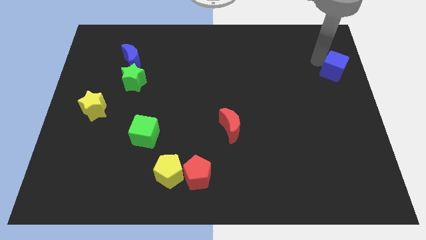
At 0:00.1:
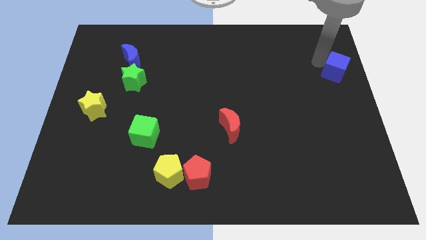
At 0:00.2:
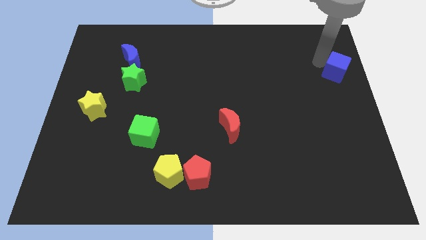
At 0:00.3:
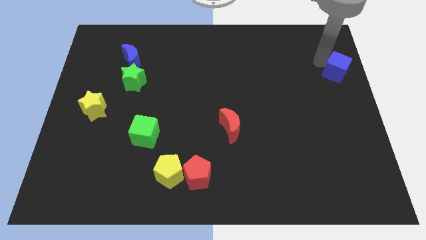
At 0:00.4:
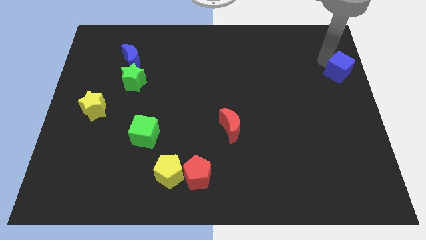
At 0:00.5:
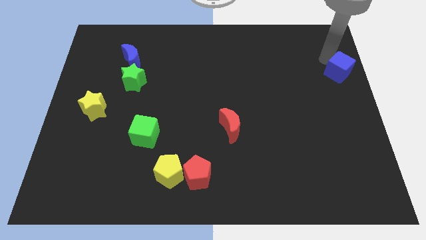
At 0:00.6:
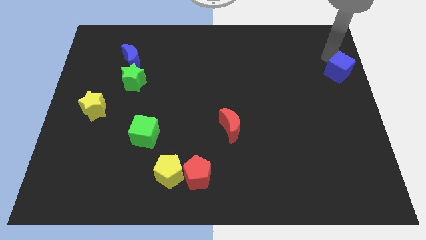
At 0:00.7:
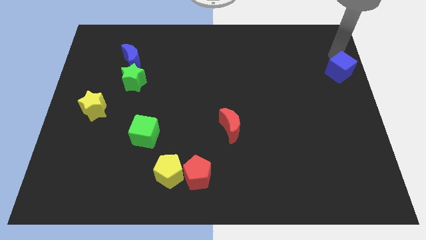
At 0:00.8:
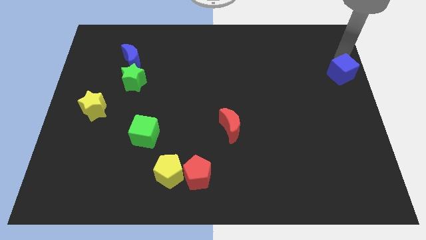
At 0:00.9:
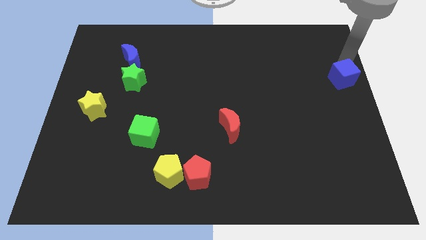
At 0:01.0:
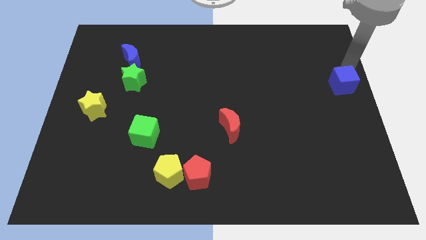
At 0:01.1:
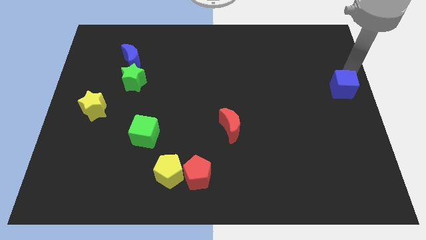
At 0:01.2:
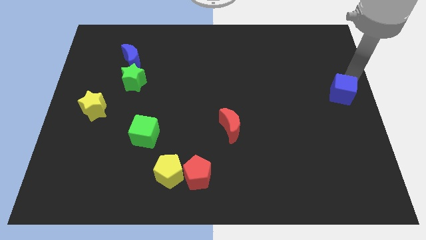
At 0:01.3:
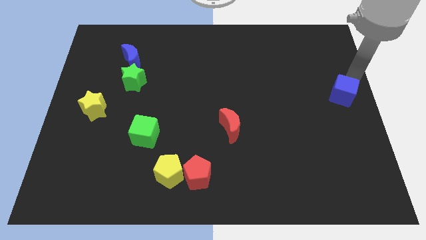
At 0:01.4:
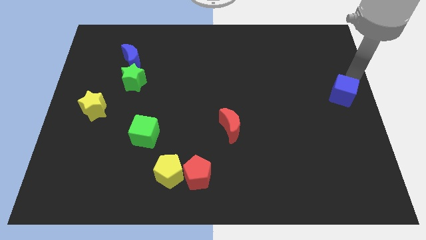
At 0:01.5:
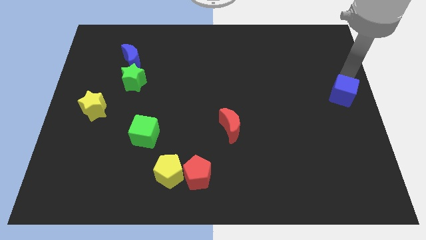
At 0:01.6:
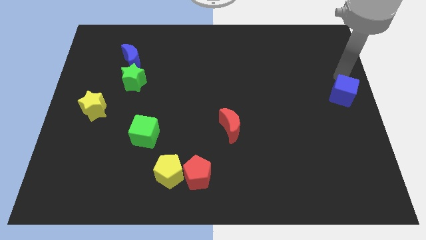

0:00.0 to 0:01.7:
push the blue cube towards the right center of the board

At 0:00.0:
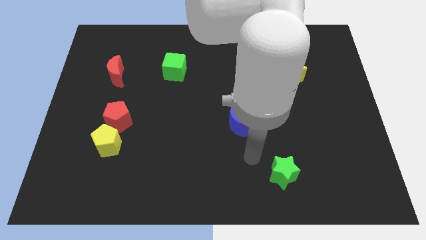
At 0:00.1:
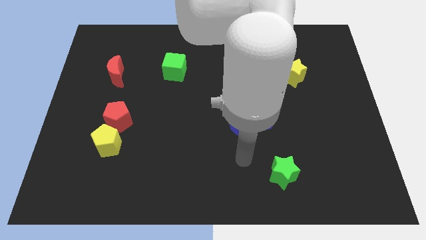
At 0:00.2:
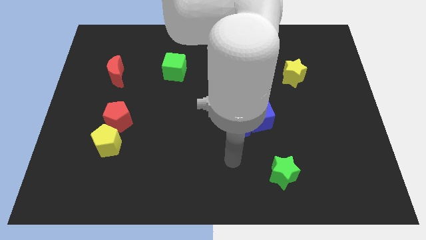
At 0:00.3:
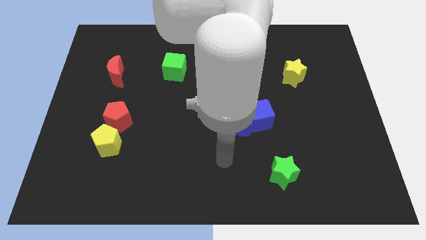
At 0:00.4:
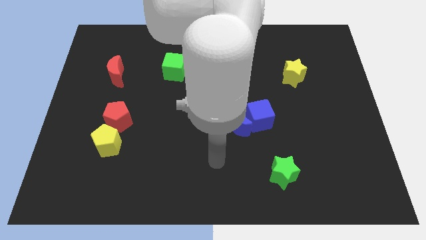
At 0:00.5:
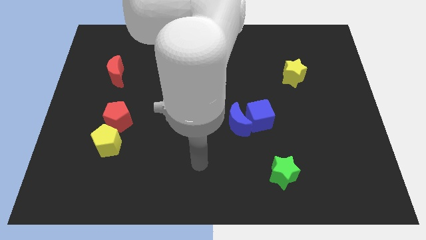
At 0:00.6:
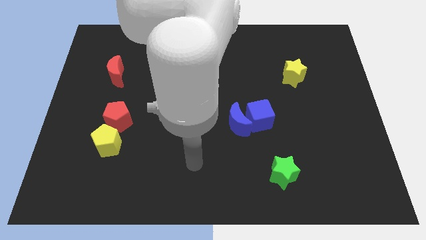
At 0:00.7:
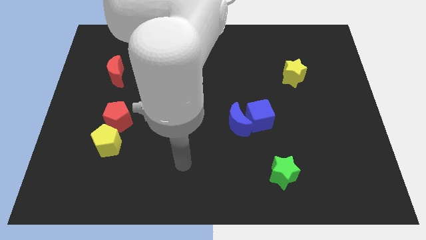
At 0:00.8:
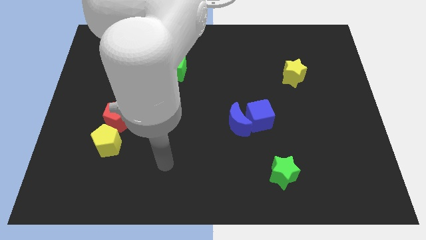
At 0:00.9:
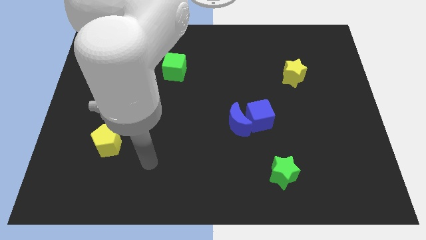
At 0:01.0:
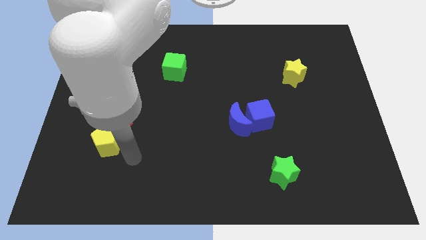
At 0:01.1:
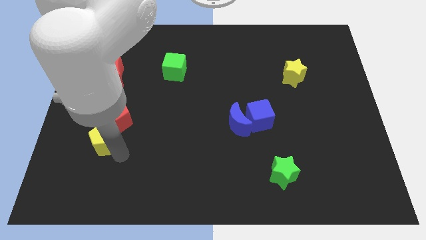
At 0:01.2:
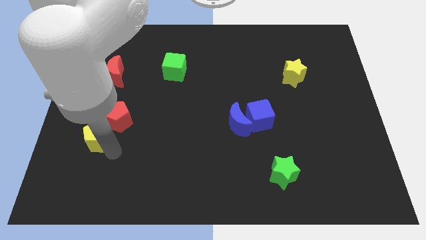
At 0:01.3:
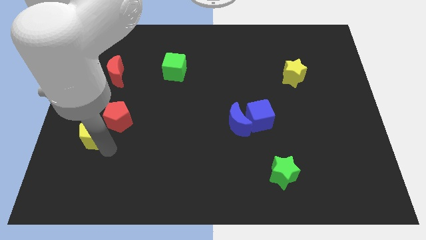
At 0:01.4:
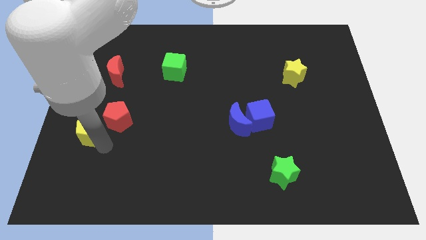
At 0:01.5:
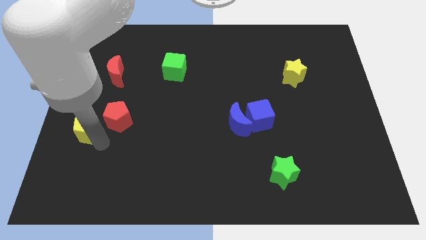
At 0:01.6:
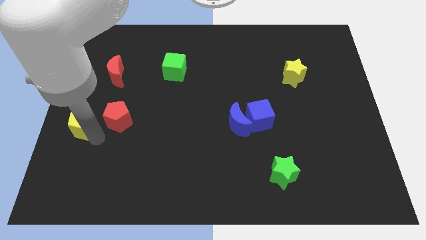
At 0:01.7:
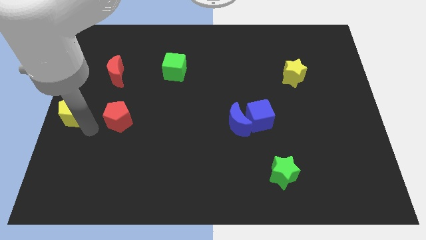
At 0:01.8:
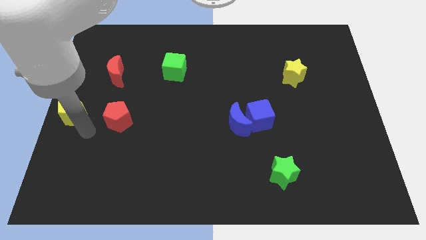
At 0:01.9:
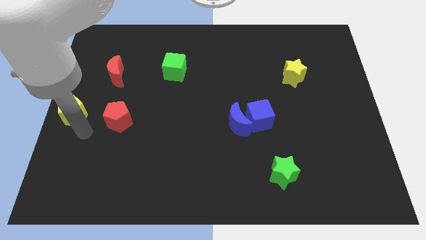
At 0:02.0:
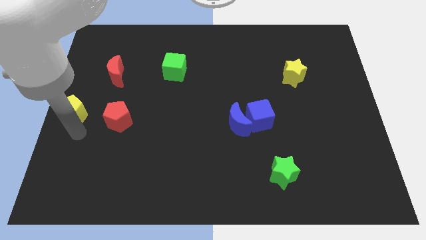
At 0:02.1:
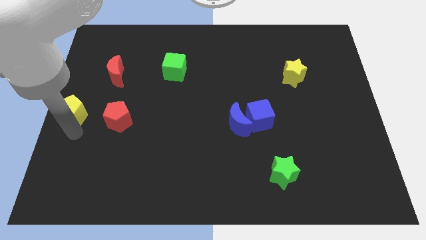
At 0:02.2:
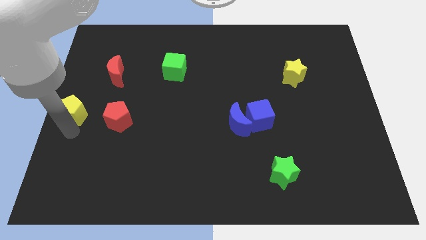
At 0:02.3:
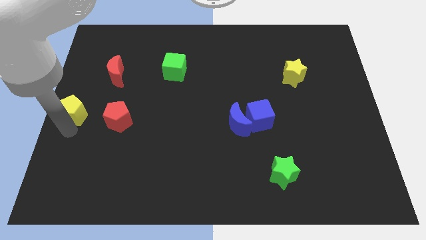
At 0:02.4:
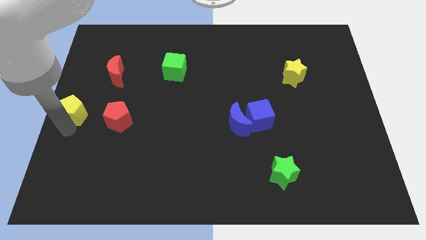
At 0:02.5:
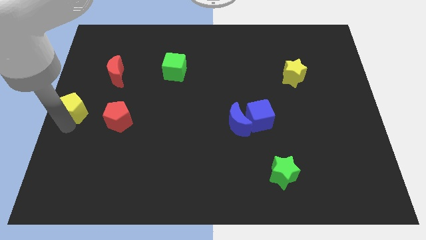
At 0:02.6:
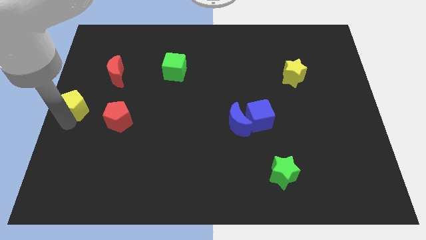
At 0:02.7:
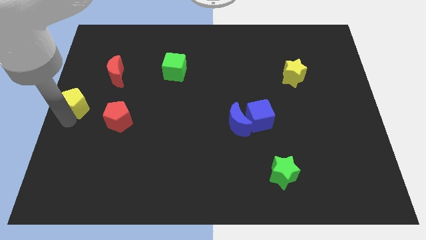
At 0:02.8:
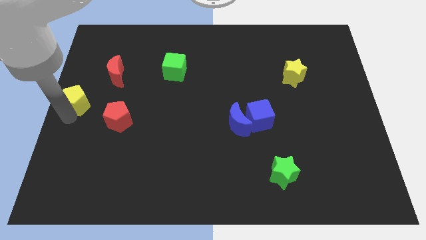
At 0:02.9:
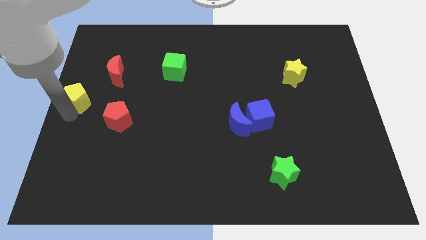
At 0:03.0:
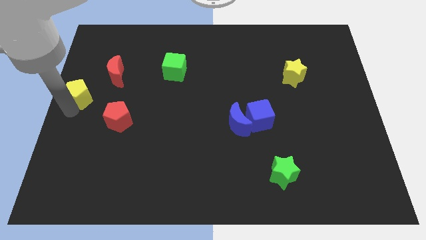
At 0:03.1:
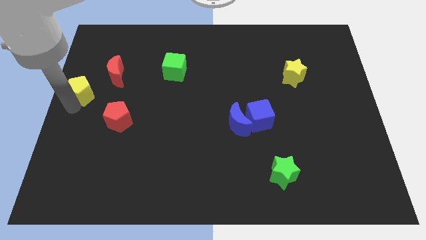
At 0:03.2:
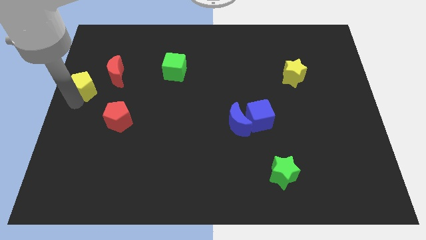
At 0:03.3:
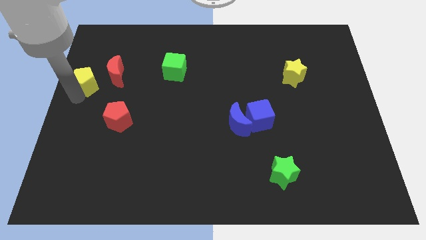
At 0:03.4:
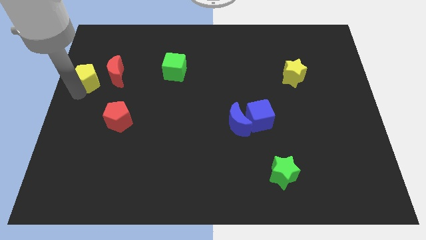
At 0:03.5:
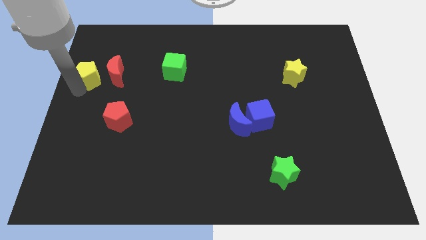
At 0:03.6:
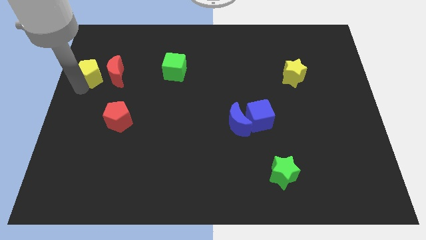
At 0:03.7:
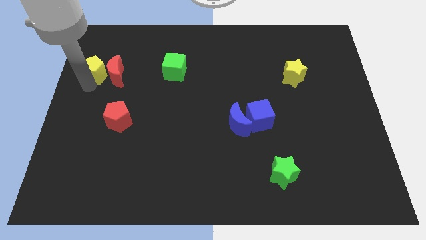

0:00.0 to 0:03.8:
move the yellow pentagon to the left of the red crescent

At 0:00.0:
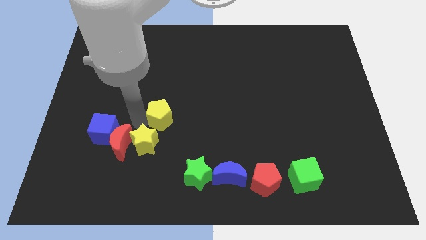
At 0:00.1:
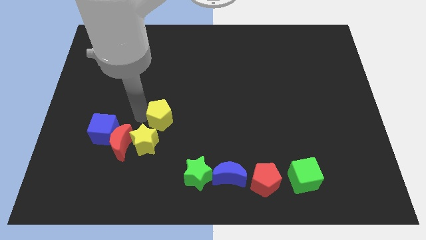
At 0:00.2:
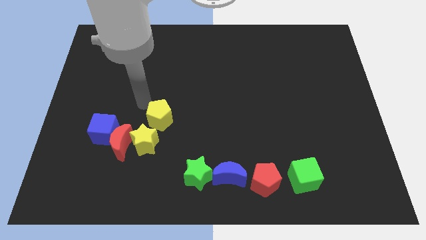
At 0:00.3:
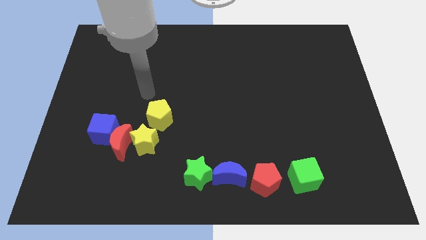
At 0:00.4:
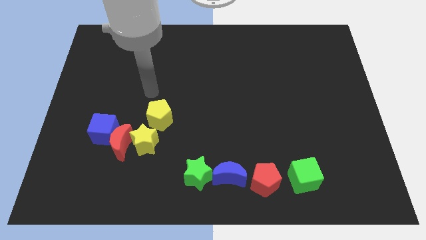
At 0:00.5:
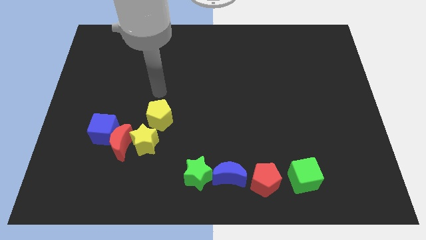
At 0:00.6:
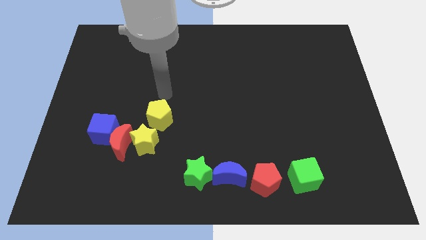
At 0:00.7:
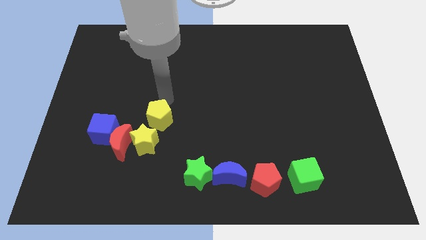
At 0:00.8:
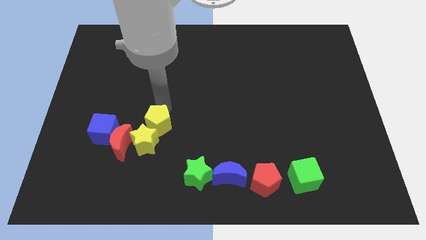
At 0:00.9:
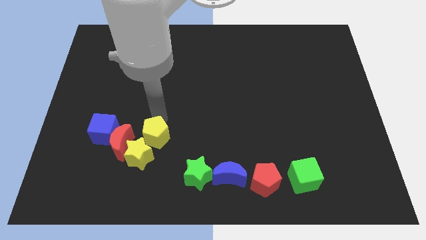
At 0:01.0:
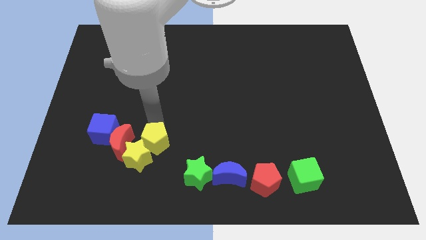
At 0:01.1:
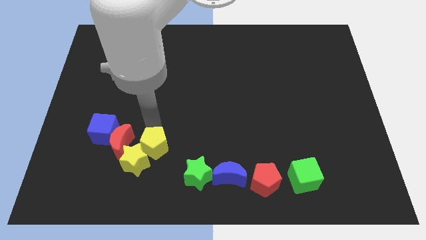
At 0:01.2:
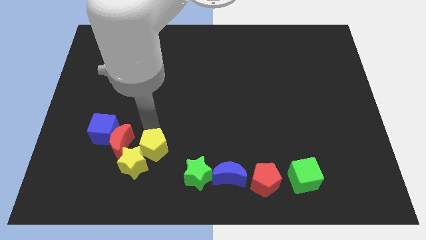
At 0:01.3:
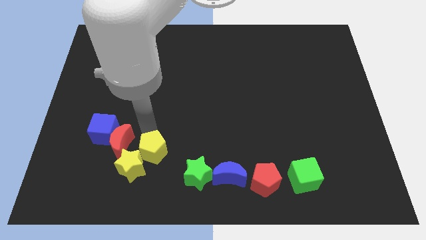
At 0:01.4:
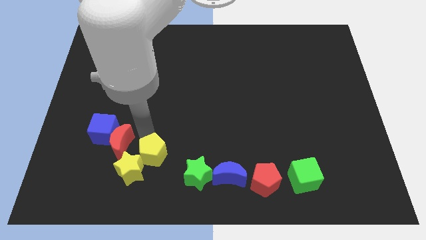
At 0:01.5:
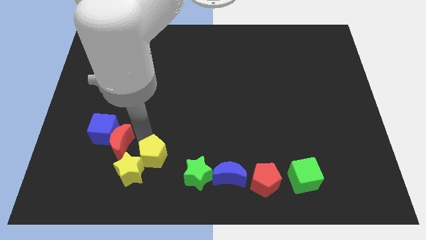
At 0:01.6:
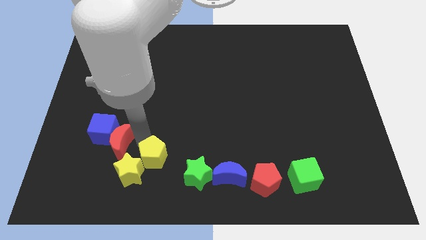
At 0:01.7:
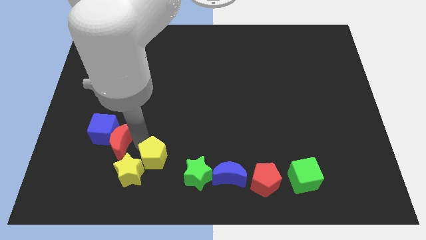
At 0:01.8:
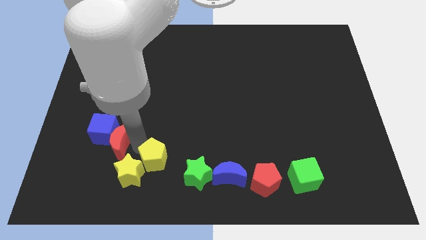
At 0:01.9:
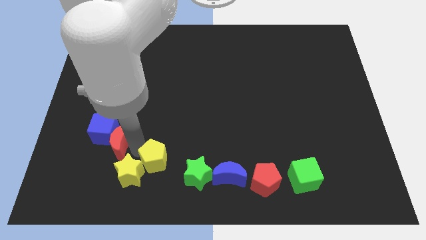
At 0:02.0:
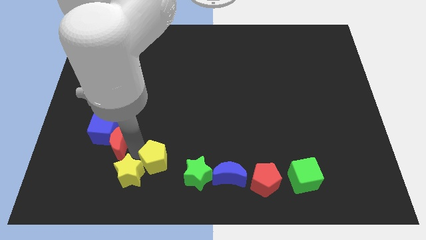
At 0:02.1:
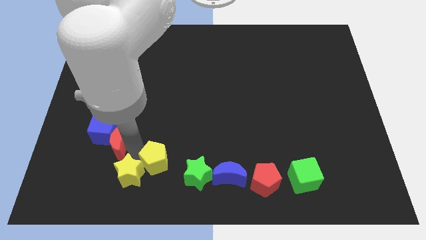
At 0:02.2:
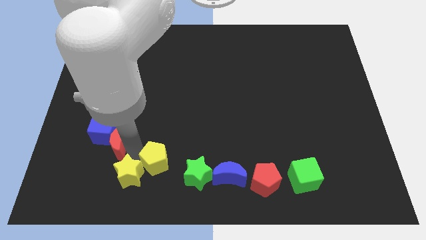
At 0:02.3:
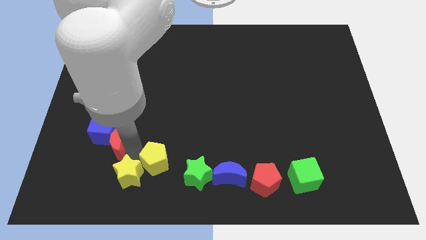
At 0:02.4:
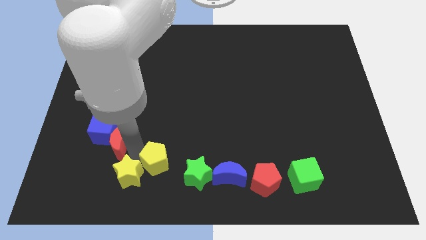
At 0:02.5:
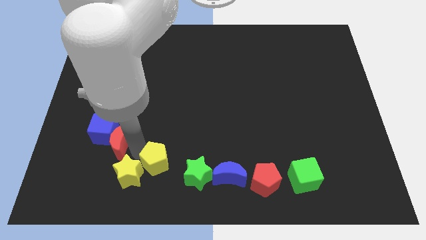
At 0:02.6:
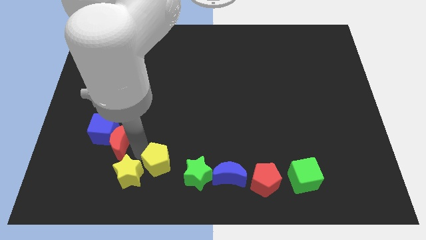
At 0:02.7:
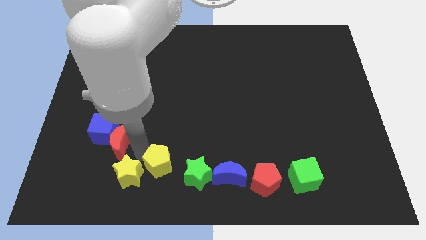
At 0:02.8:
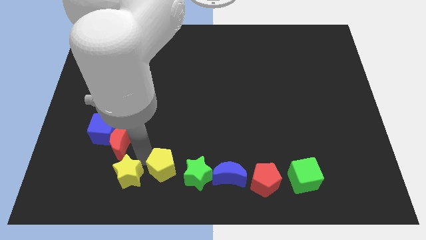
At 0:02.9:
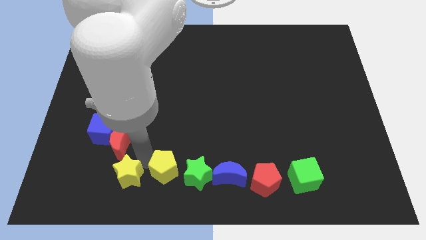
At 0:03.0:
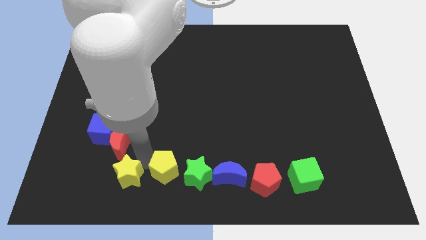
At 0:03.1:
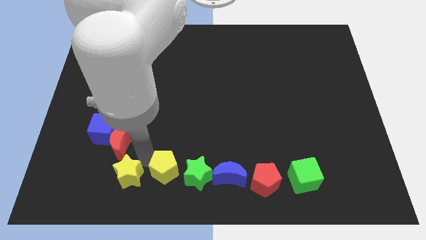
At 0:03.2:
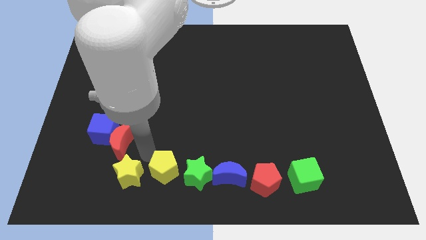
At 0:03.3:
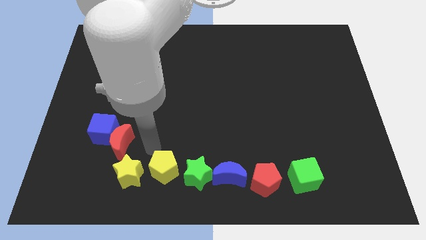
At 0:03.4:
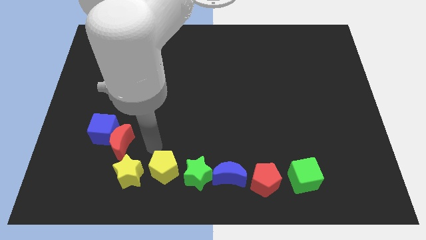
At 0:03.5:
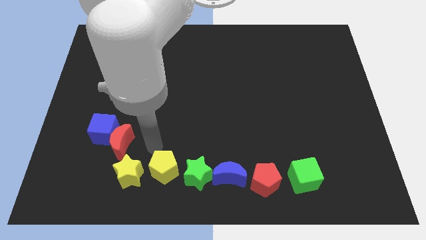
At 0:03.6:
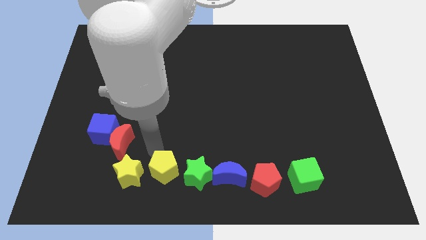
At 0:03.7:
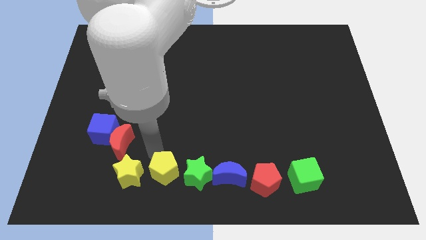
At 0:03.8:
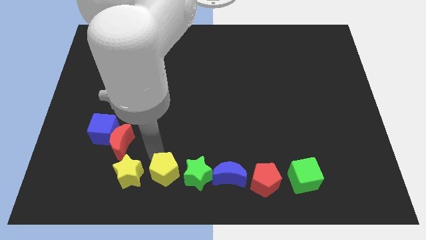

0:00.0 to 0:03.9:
push the yellow pentagon to the left of green star
